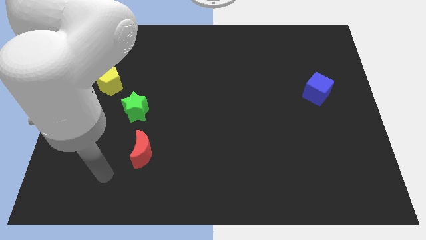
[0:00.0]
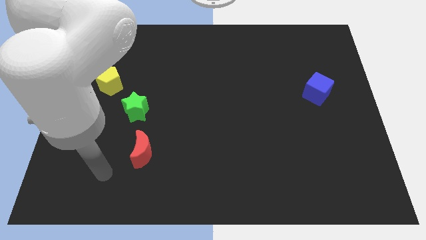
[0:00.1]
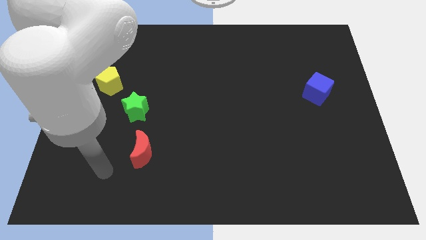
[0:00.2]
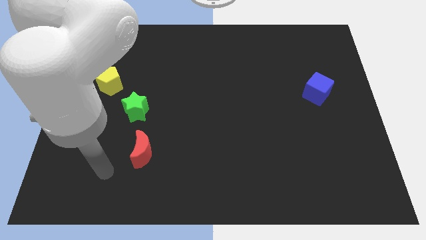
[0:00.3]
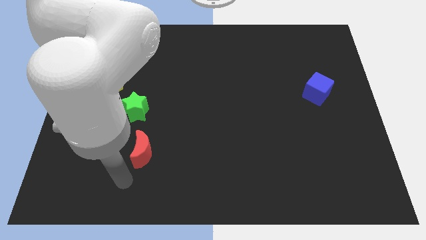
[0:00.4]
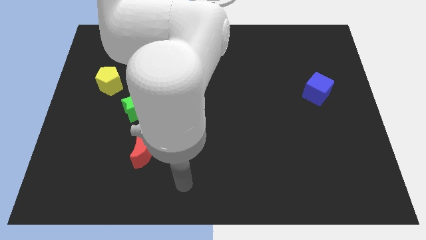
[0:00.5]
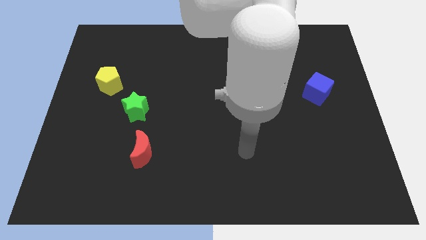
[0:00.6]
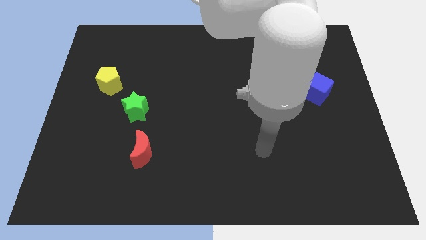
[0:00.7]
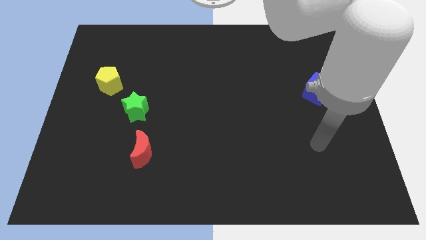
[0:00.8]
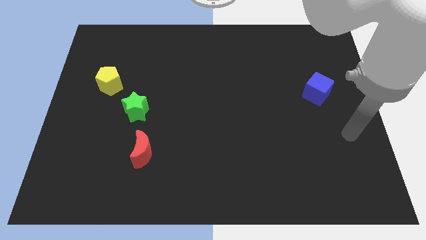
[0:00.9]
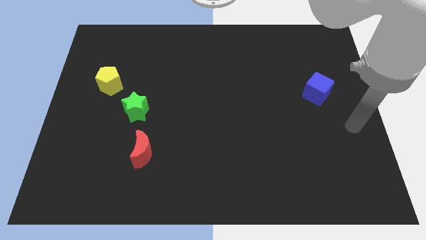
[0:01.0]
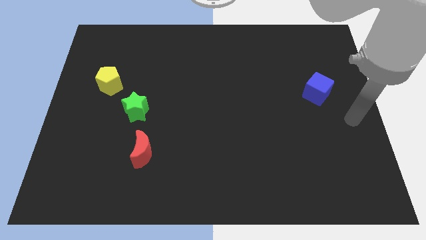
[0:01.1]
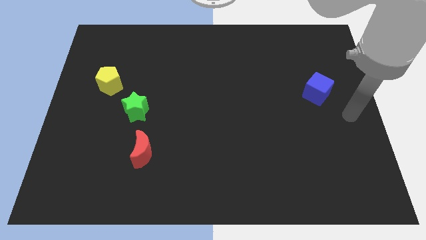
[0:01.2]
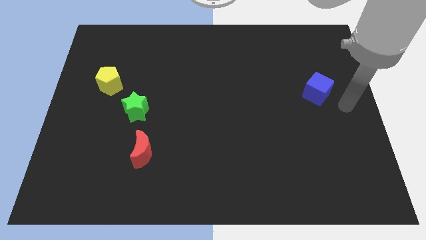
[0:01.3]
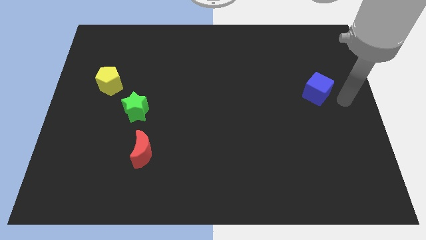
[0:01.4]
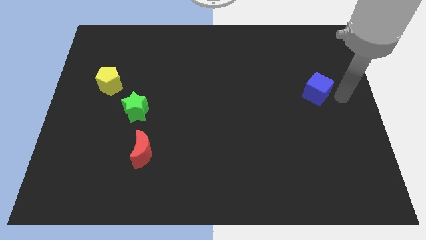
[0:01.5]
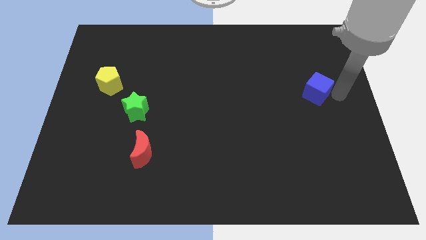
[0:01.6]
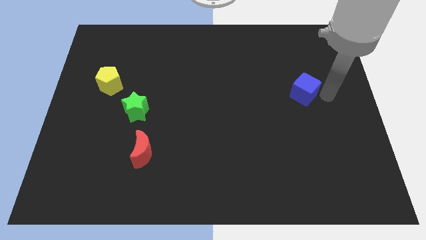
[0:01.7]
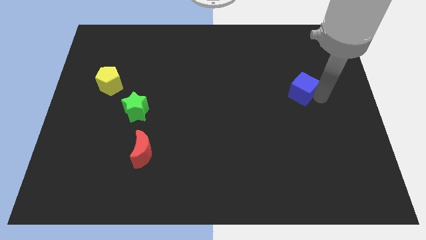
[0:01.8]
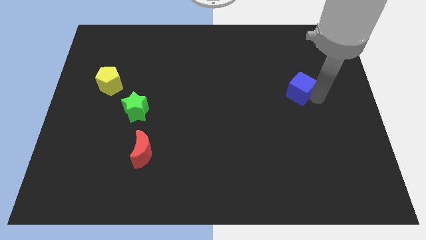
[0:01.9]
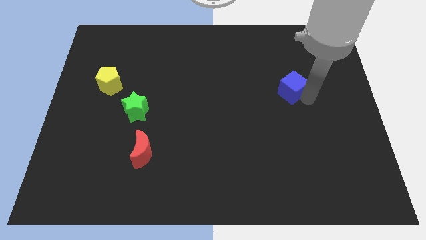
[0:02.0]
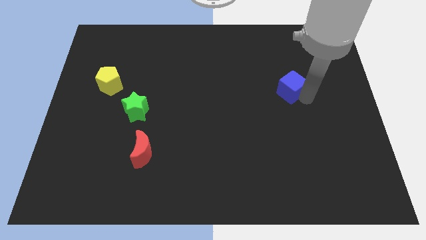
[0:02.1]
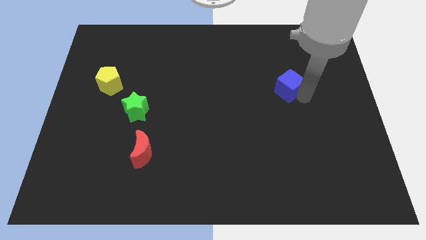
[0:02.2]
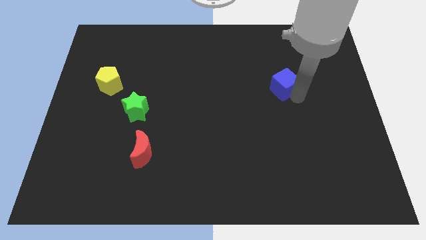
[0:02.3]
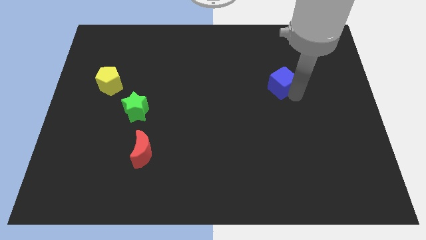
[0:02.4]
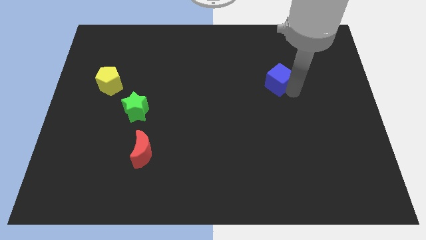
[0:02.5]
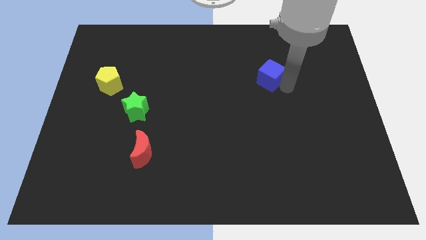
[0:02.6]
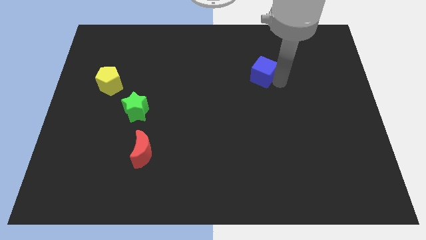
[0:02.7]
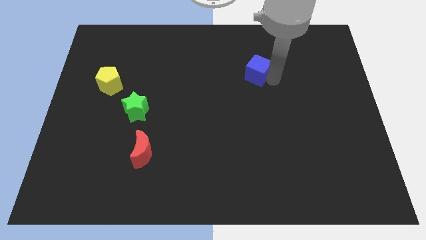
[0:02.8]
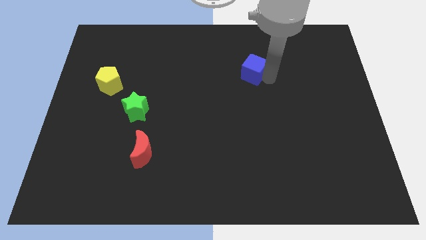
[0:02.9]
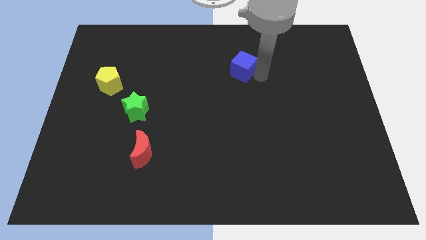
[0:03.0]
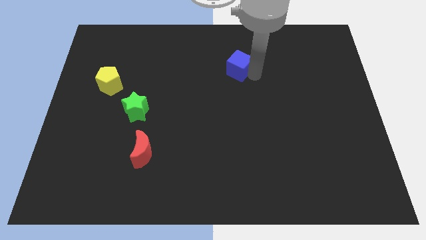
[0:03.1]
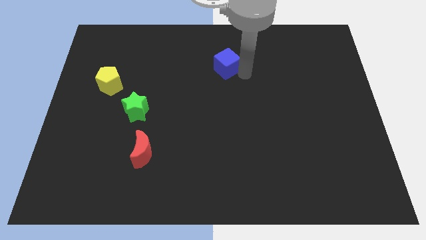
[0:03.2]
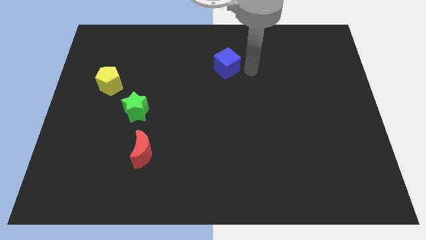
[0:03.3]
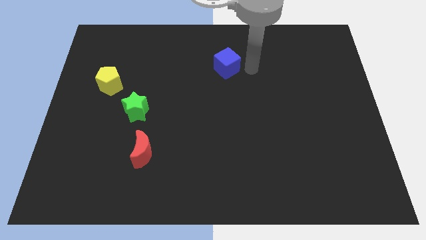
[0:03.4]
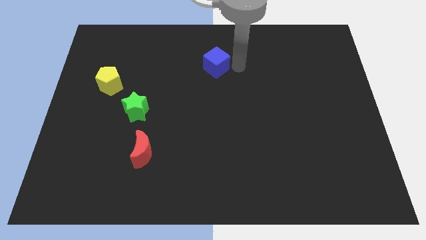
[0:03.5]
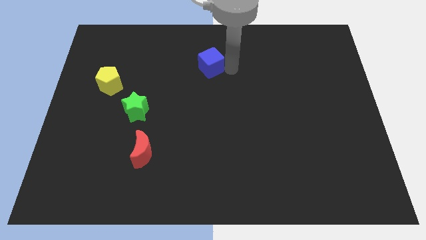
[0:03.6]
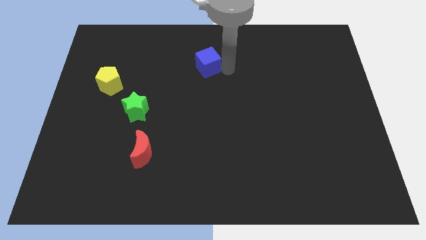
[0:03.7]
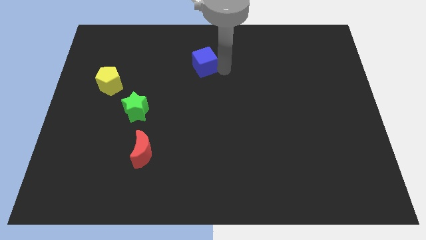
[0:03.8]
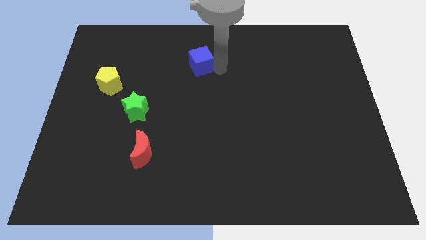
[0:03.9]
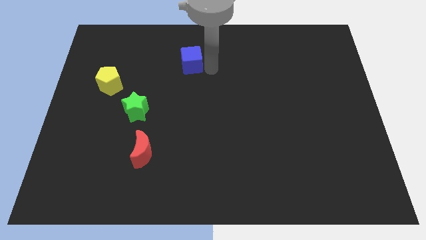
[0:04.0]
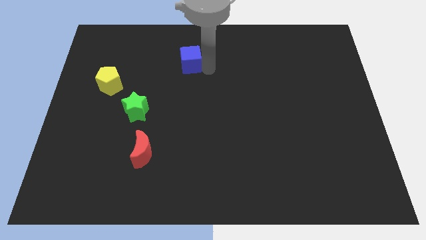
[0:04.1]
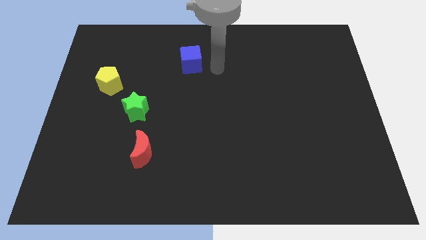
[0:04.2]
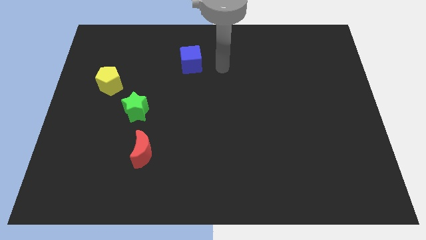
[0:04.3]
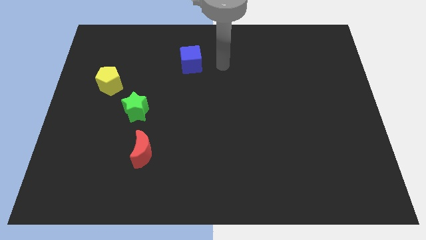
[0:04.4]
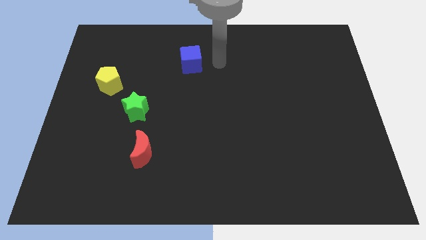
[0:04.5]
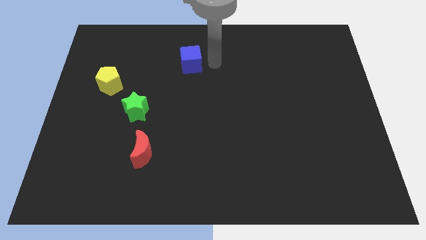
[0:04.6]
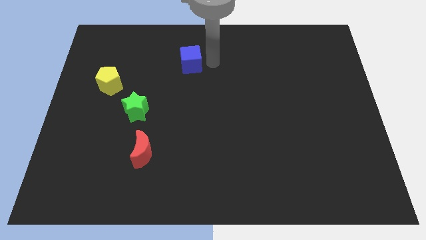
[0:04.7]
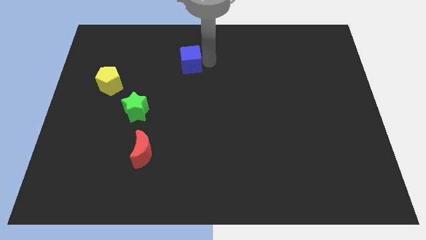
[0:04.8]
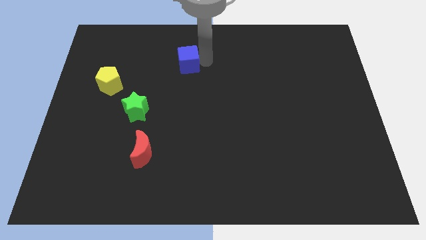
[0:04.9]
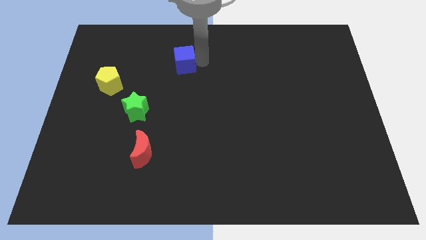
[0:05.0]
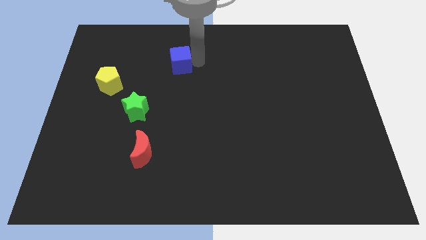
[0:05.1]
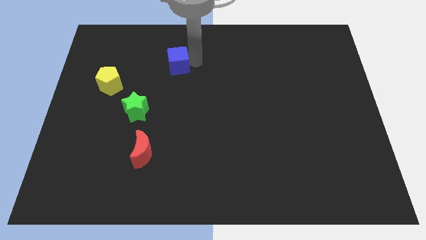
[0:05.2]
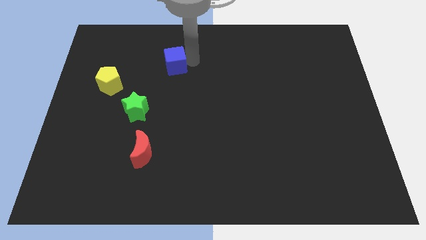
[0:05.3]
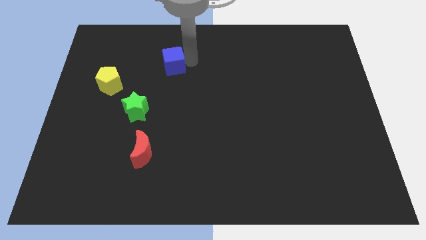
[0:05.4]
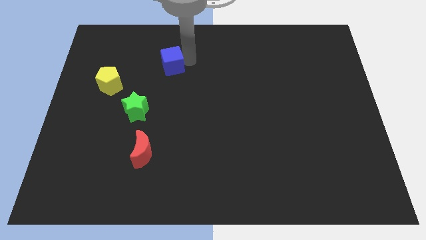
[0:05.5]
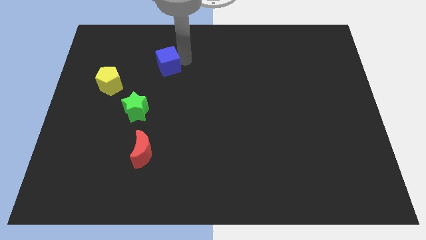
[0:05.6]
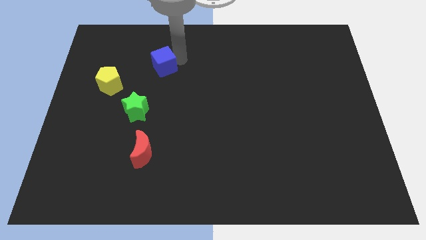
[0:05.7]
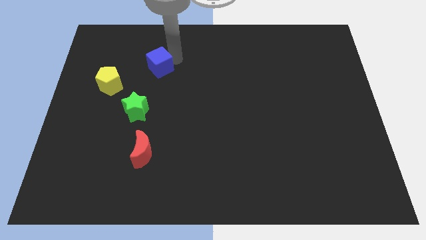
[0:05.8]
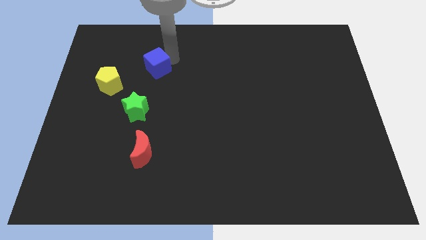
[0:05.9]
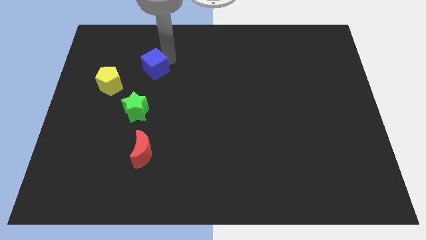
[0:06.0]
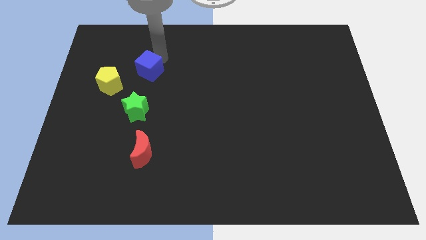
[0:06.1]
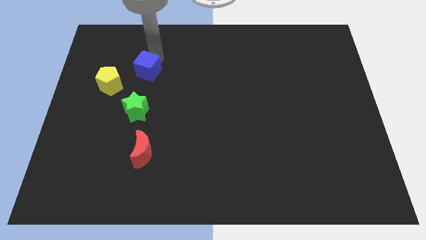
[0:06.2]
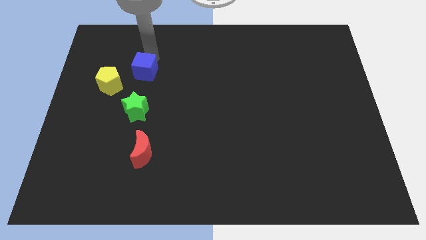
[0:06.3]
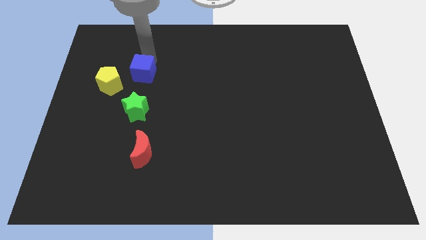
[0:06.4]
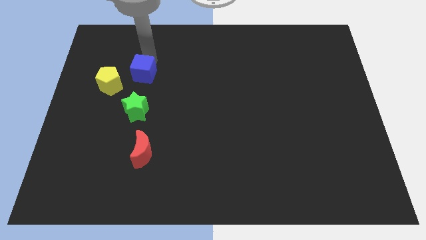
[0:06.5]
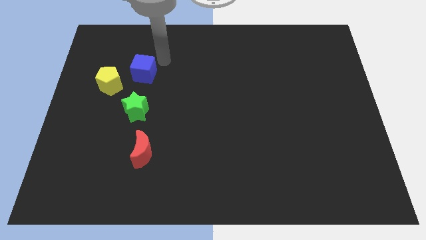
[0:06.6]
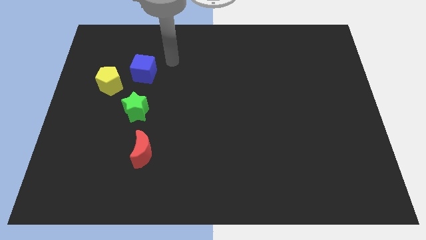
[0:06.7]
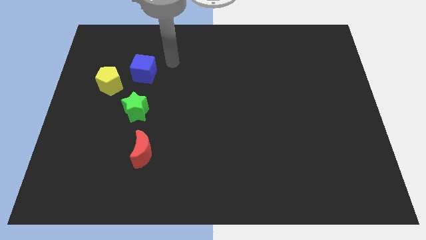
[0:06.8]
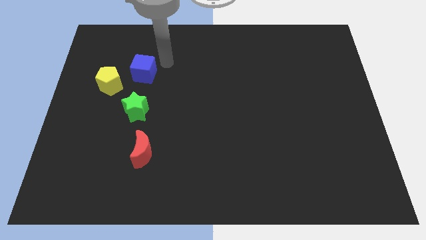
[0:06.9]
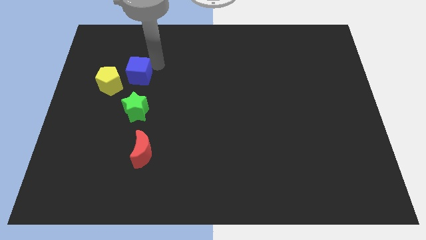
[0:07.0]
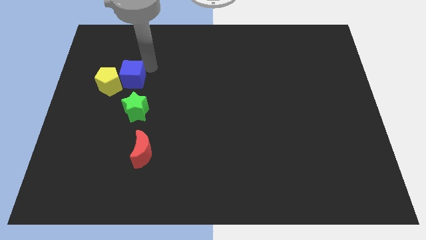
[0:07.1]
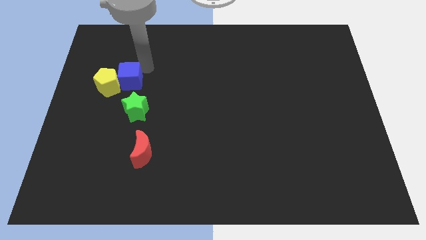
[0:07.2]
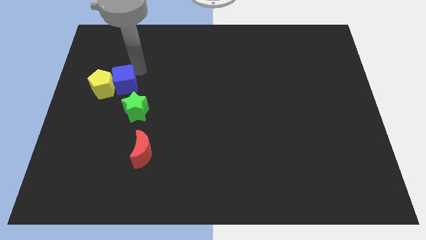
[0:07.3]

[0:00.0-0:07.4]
slide the blue cube next to the pentagon

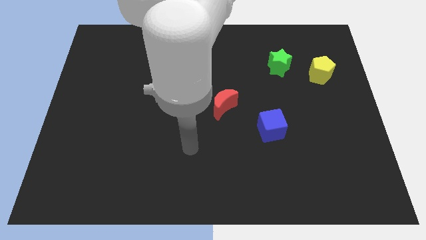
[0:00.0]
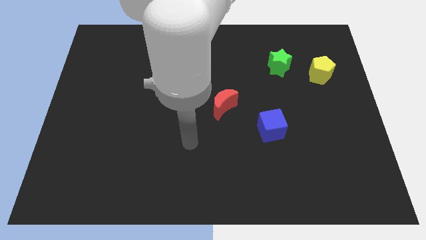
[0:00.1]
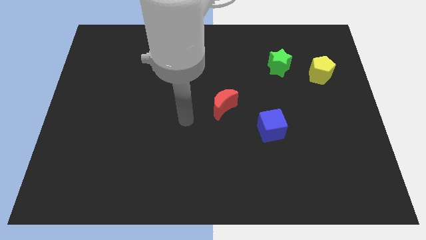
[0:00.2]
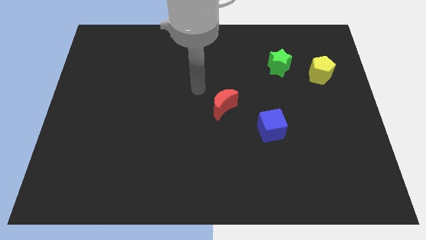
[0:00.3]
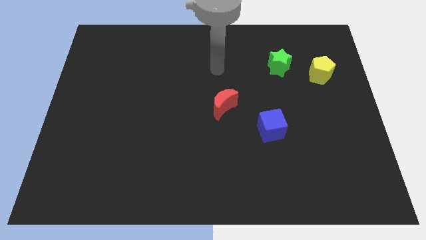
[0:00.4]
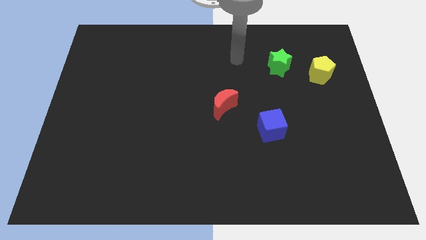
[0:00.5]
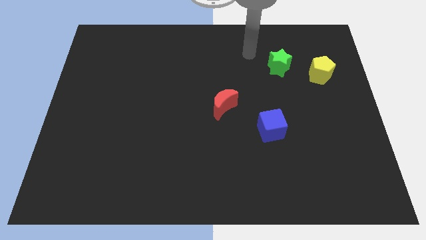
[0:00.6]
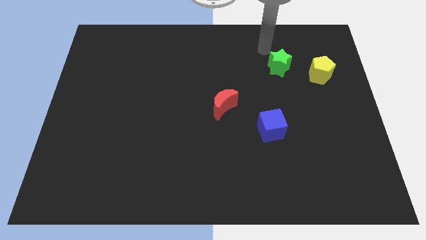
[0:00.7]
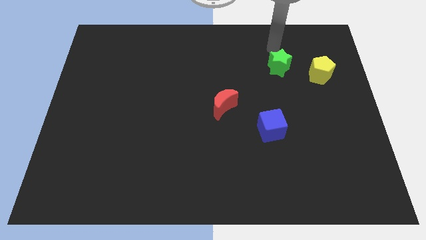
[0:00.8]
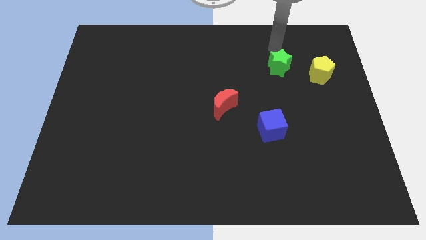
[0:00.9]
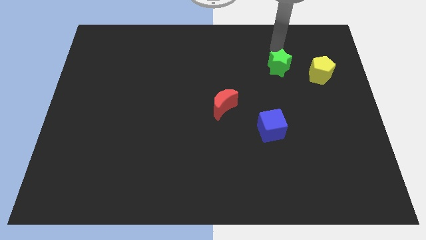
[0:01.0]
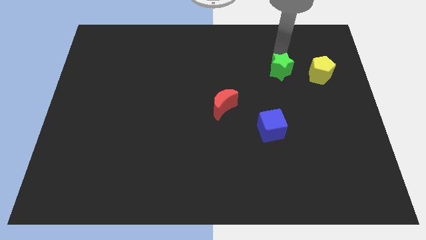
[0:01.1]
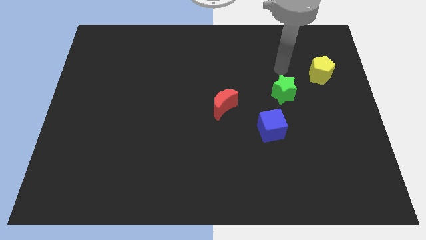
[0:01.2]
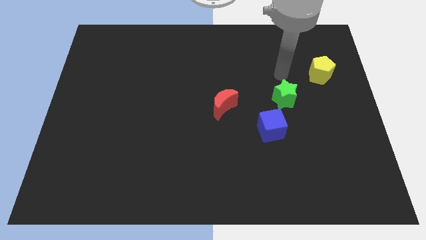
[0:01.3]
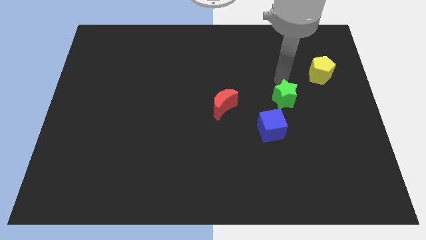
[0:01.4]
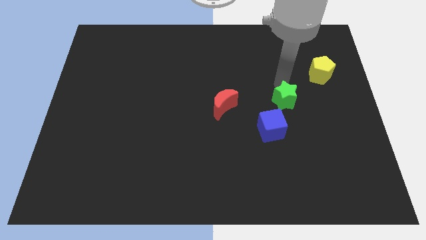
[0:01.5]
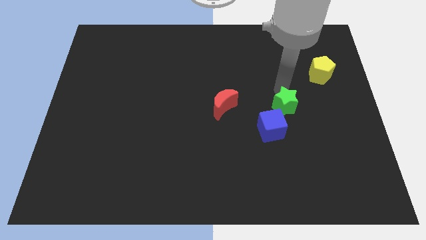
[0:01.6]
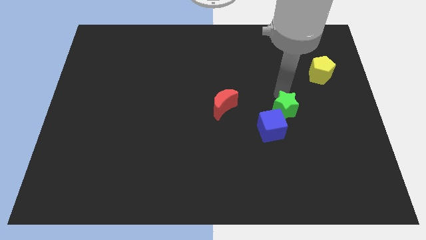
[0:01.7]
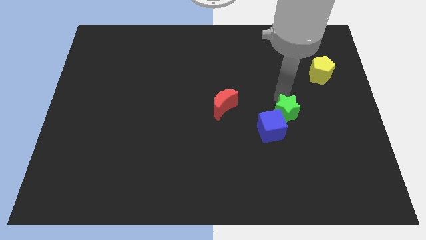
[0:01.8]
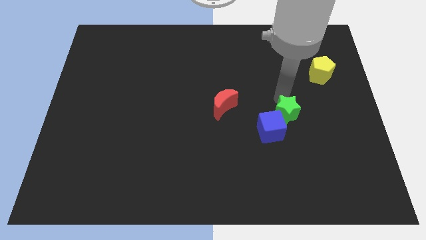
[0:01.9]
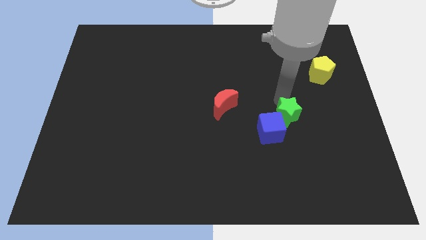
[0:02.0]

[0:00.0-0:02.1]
push the green star close to the blue block
